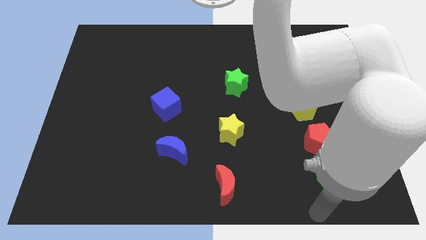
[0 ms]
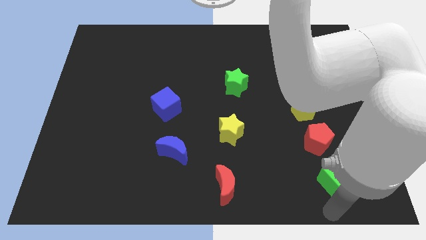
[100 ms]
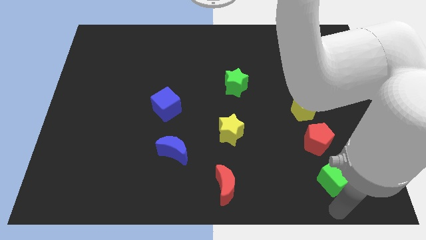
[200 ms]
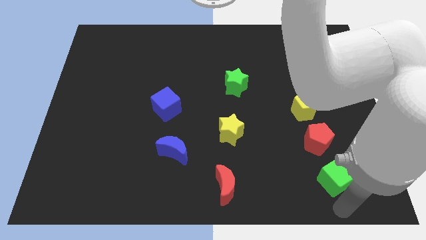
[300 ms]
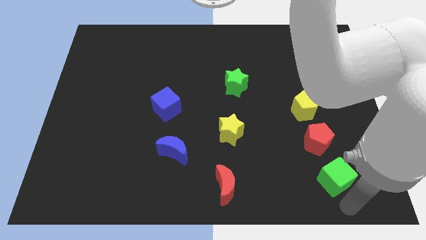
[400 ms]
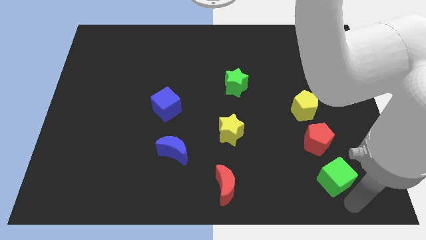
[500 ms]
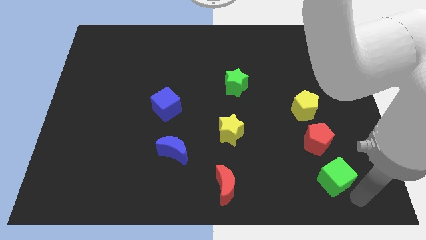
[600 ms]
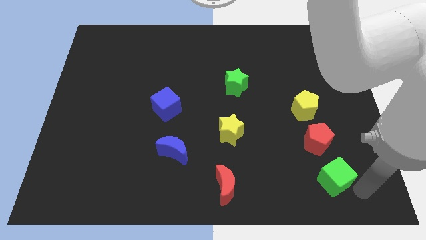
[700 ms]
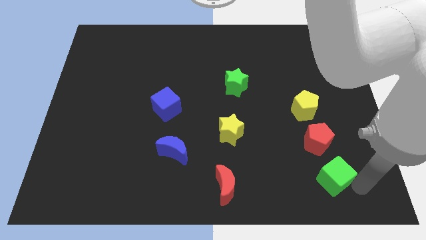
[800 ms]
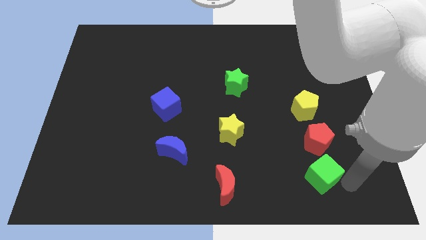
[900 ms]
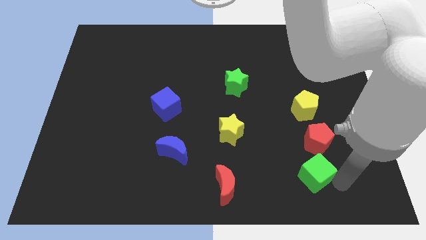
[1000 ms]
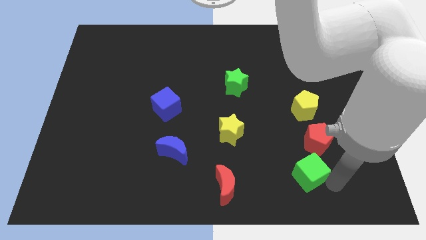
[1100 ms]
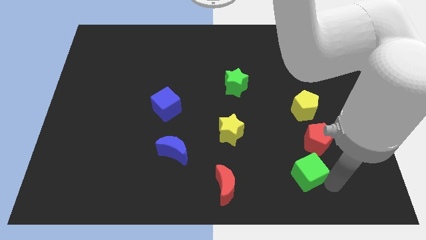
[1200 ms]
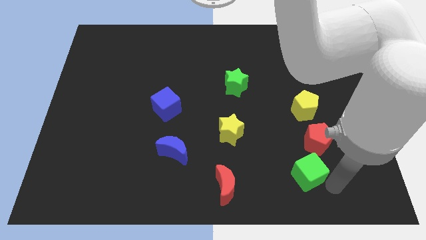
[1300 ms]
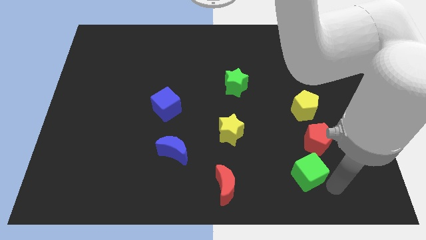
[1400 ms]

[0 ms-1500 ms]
push the green cube upwards slightly

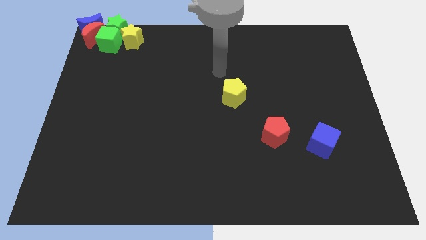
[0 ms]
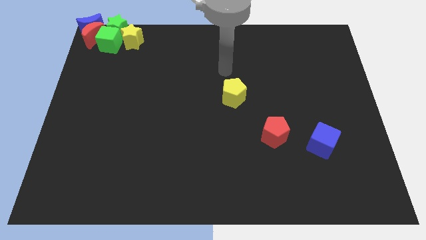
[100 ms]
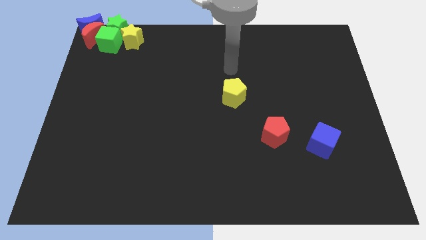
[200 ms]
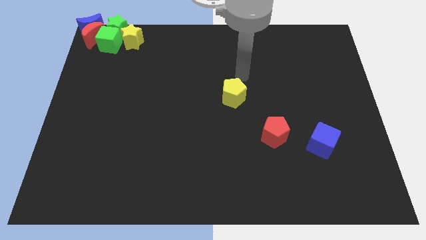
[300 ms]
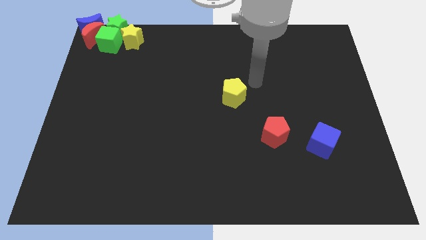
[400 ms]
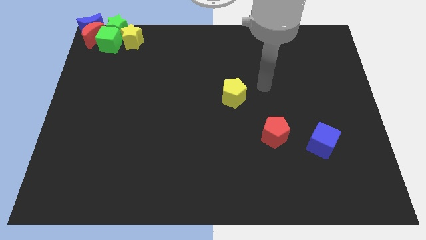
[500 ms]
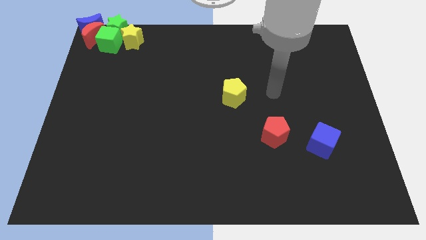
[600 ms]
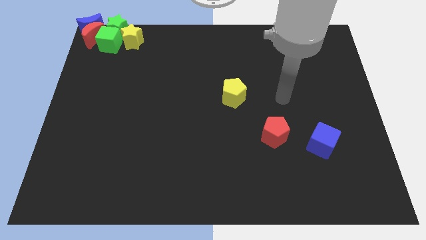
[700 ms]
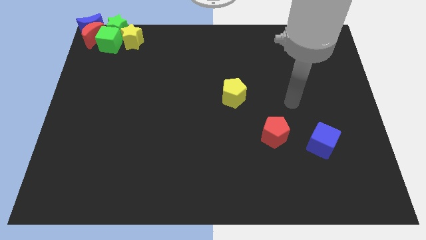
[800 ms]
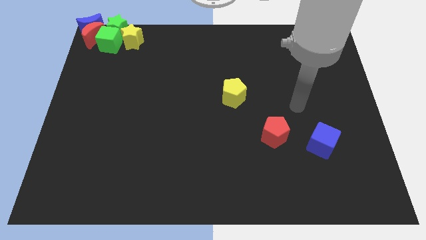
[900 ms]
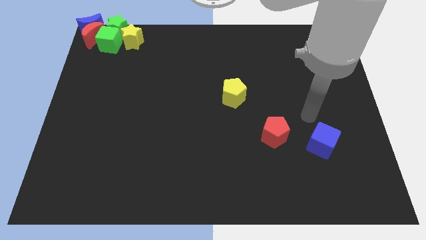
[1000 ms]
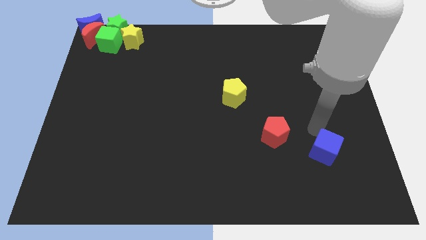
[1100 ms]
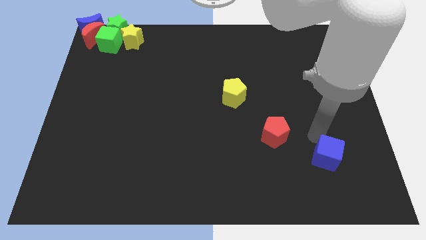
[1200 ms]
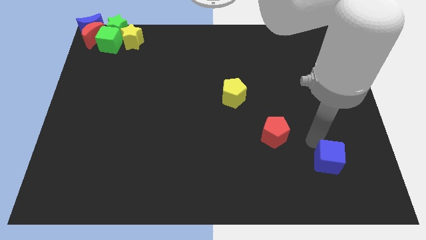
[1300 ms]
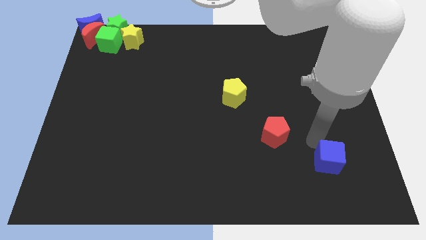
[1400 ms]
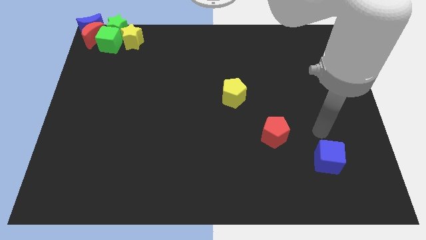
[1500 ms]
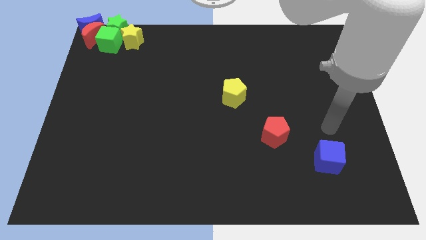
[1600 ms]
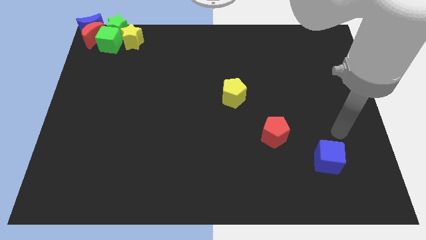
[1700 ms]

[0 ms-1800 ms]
move the blue cube towards the bottom right of the board

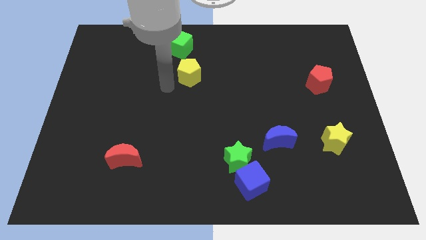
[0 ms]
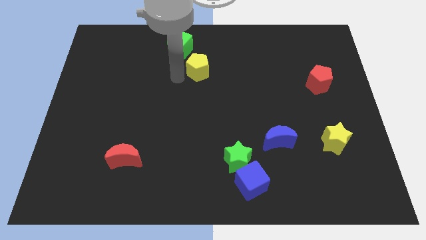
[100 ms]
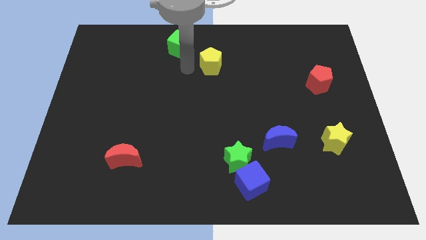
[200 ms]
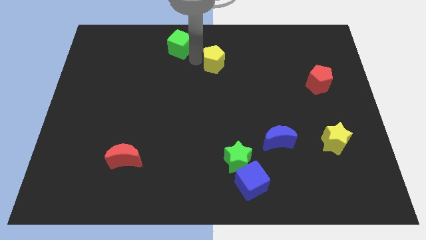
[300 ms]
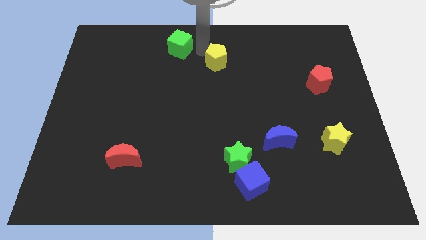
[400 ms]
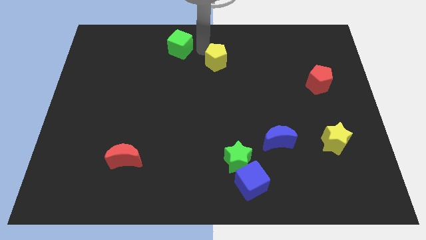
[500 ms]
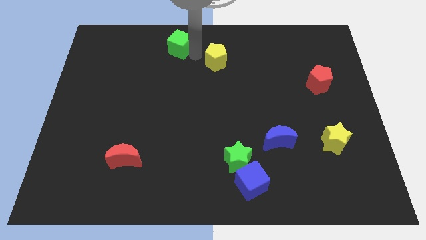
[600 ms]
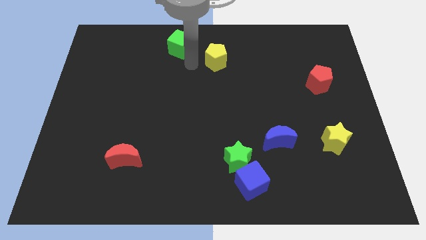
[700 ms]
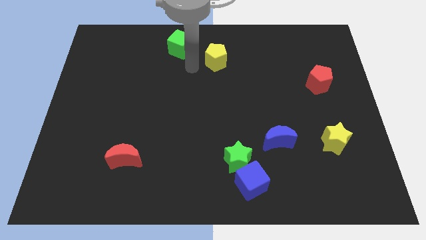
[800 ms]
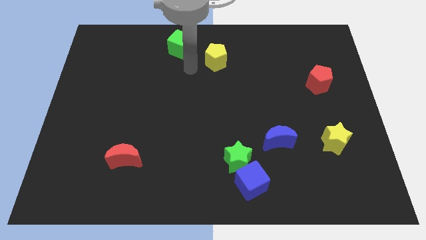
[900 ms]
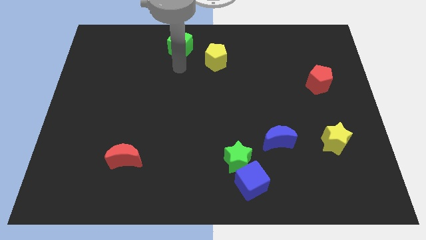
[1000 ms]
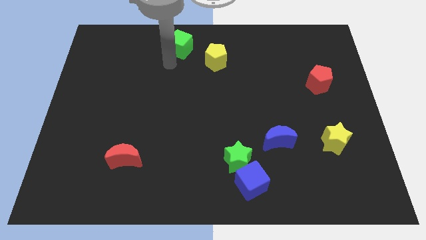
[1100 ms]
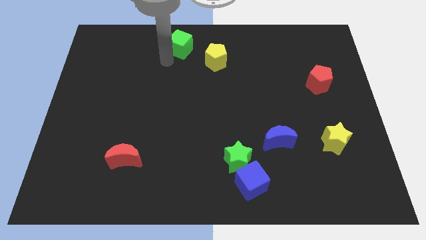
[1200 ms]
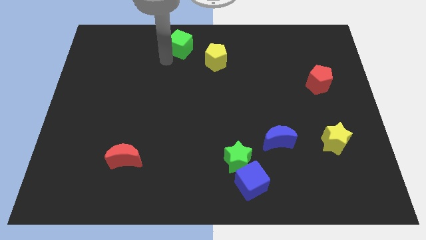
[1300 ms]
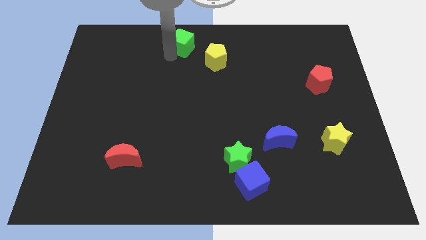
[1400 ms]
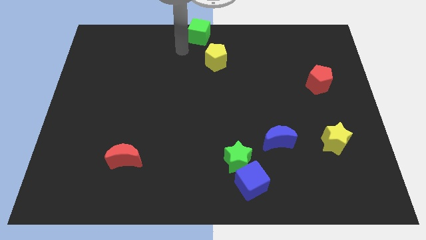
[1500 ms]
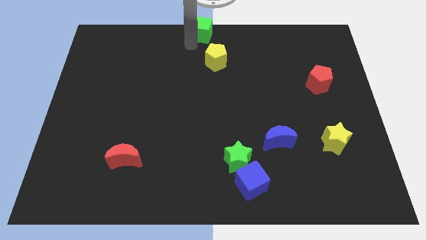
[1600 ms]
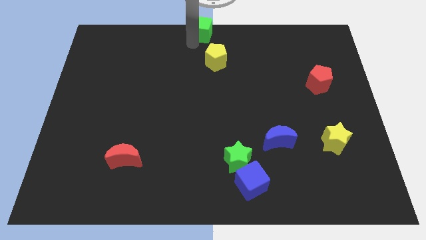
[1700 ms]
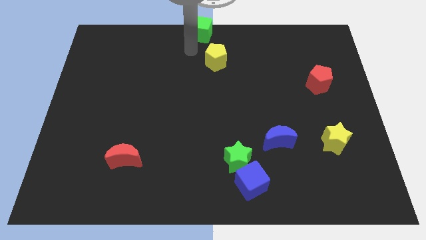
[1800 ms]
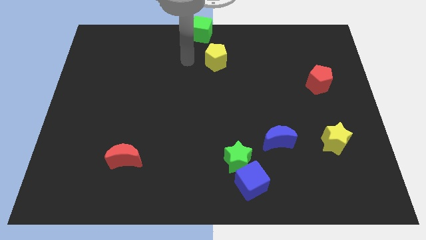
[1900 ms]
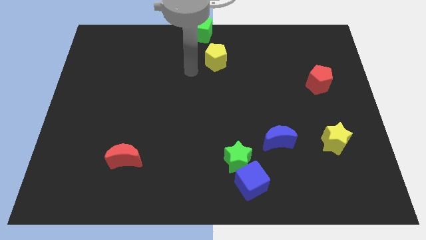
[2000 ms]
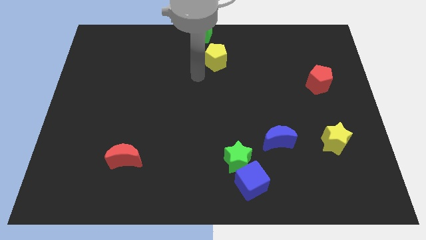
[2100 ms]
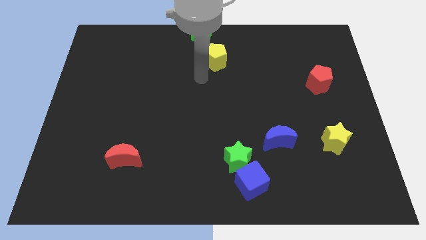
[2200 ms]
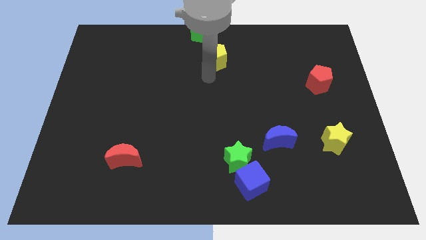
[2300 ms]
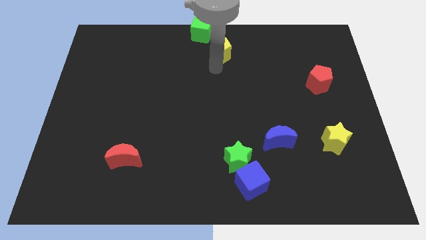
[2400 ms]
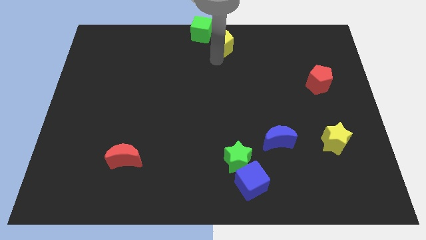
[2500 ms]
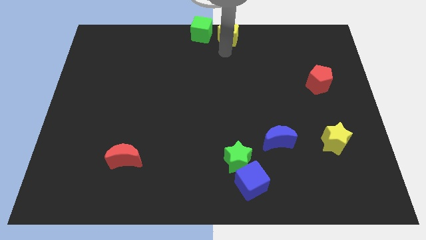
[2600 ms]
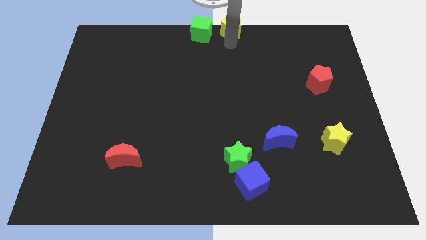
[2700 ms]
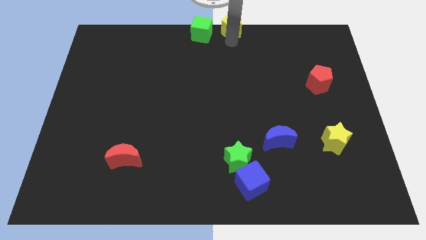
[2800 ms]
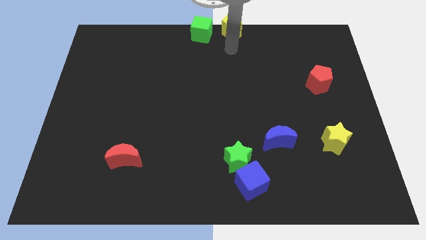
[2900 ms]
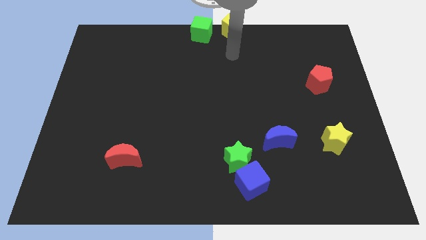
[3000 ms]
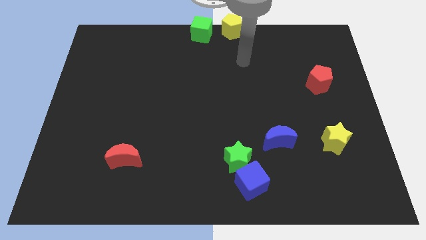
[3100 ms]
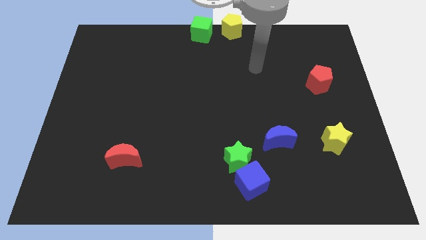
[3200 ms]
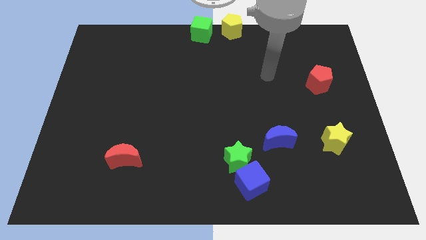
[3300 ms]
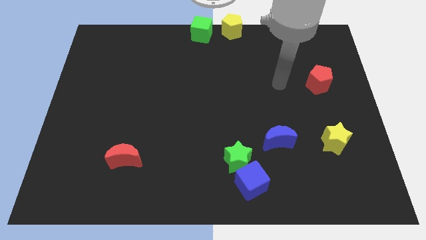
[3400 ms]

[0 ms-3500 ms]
put the green cube and yellow pentagon at the top center of the board

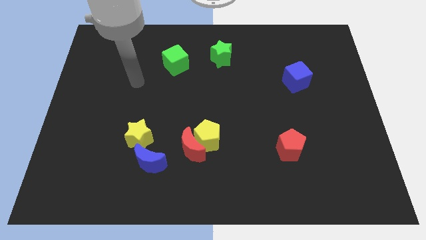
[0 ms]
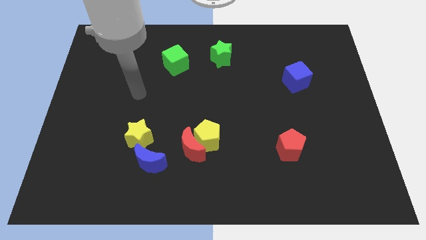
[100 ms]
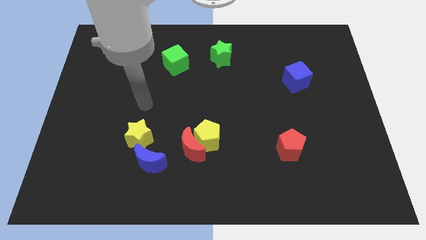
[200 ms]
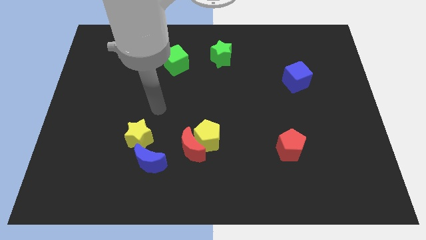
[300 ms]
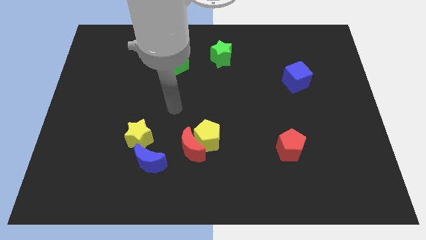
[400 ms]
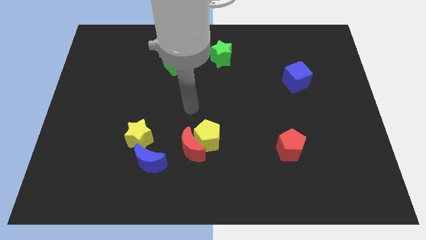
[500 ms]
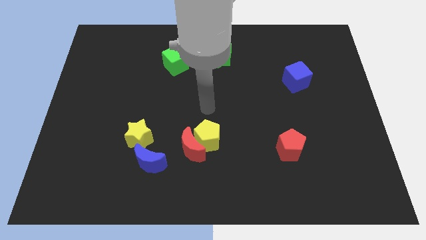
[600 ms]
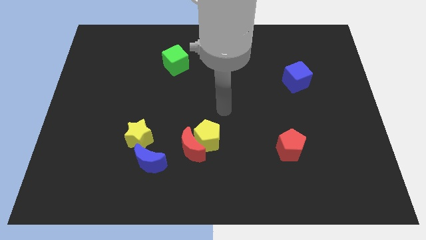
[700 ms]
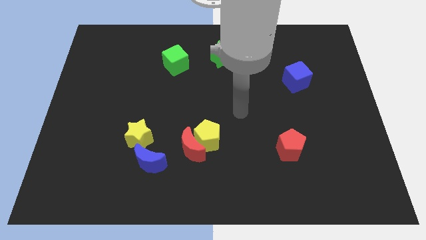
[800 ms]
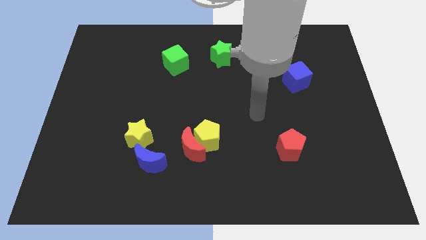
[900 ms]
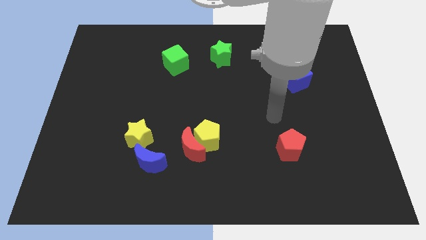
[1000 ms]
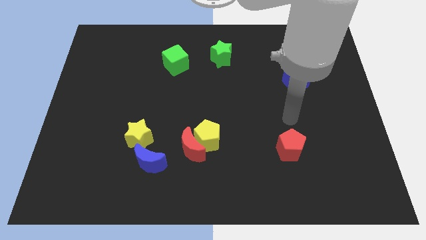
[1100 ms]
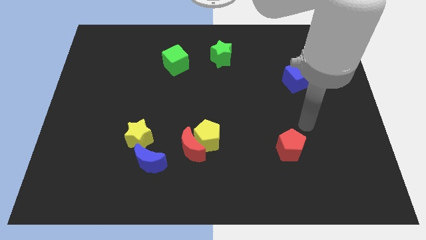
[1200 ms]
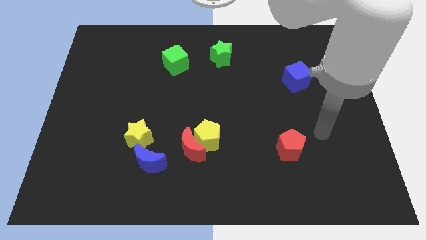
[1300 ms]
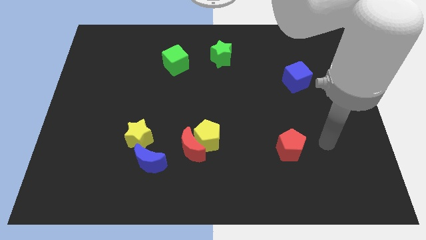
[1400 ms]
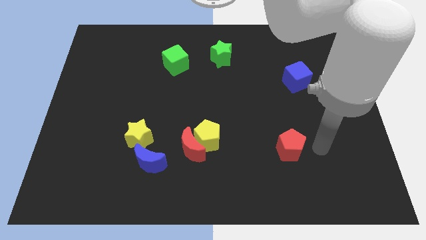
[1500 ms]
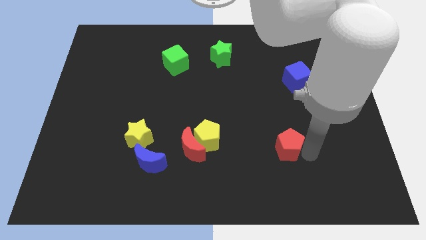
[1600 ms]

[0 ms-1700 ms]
move your arm to the right of the red pentagon

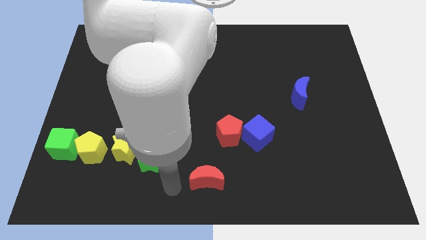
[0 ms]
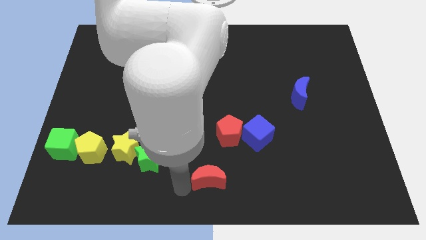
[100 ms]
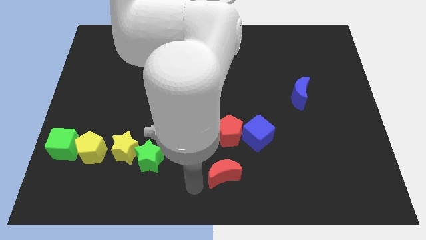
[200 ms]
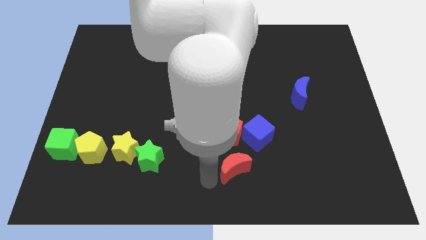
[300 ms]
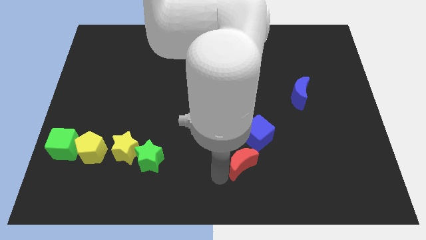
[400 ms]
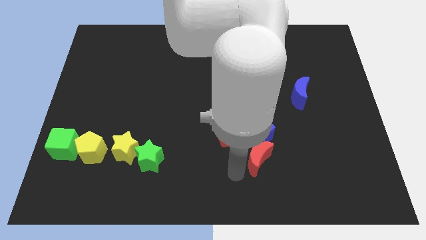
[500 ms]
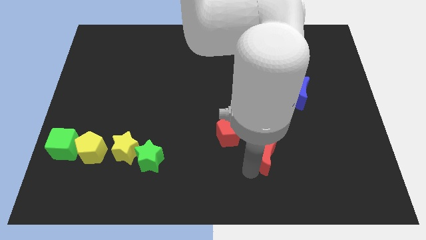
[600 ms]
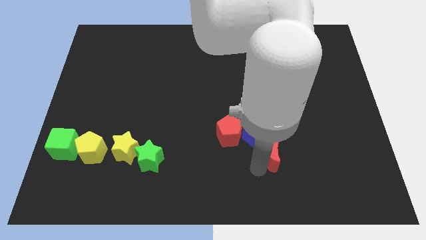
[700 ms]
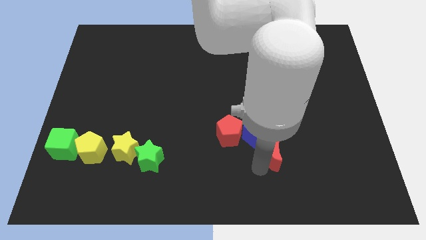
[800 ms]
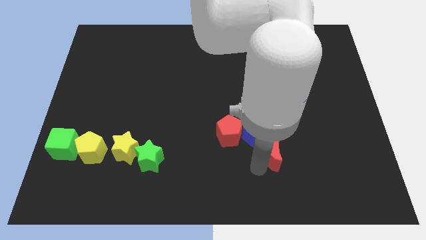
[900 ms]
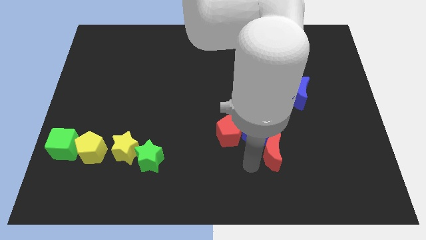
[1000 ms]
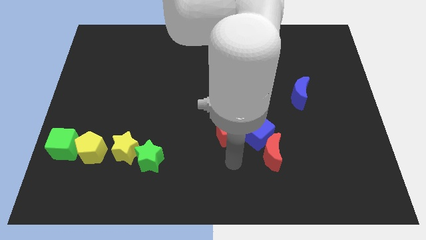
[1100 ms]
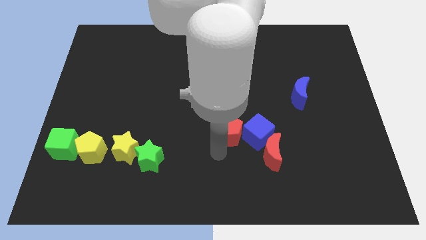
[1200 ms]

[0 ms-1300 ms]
push the red crescent to the right of the blue cube
